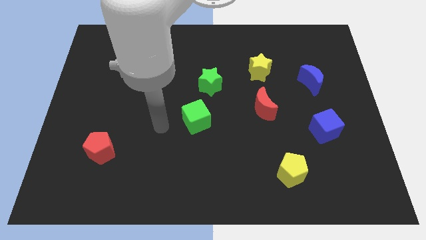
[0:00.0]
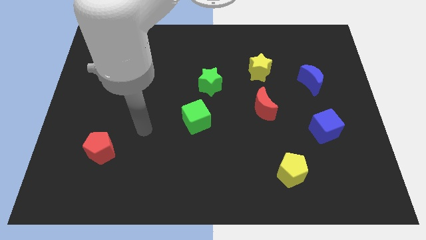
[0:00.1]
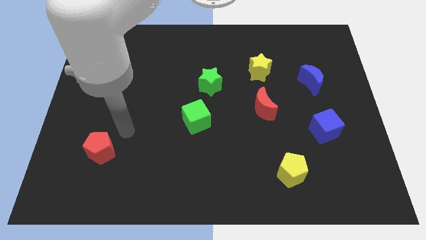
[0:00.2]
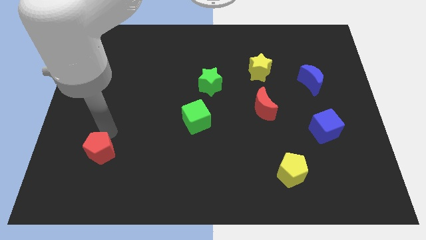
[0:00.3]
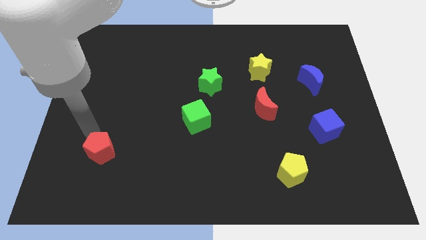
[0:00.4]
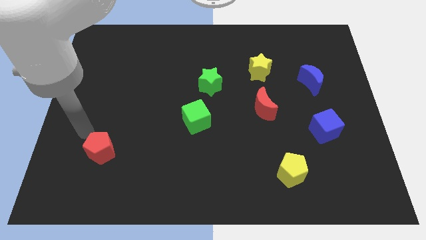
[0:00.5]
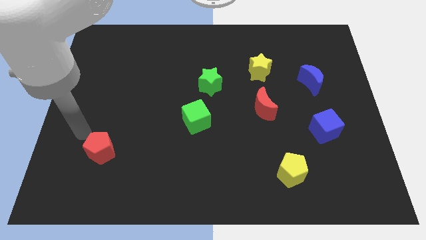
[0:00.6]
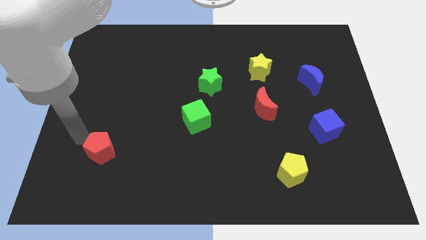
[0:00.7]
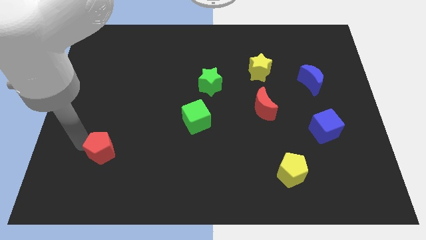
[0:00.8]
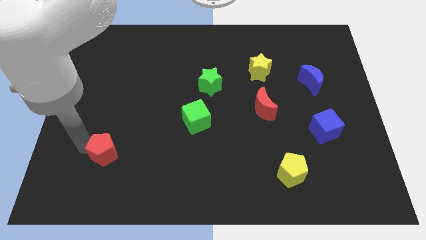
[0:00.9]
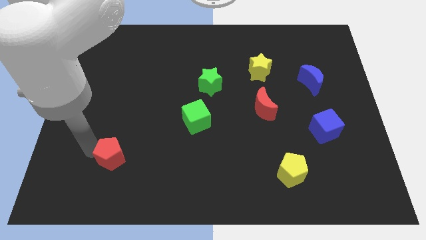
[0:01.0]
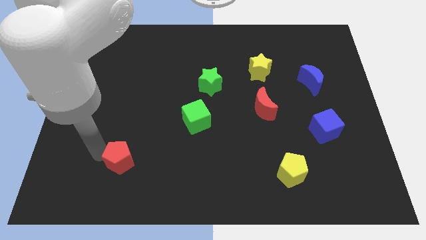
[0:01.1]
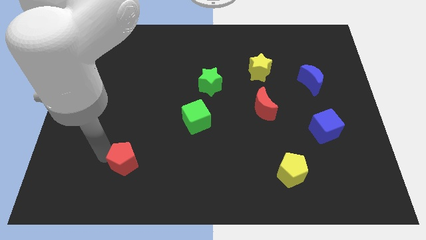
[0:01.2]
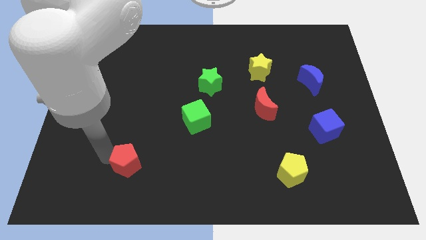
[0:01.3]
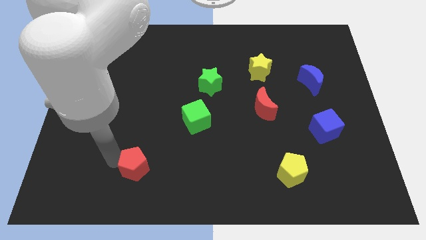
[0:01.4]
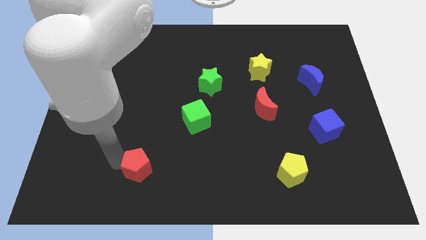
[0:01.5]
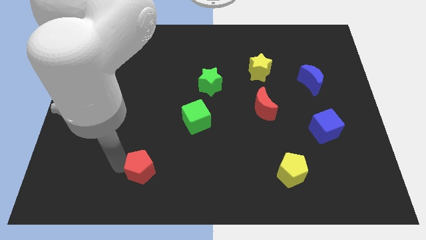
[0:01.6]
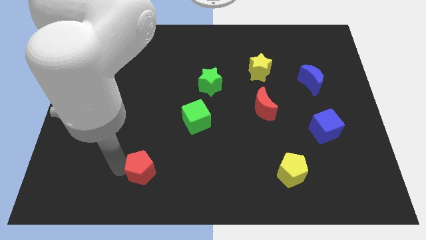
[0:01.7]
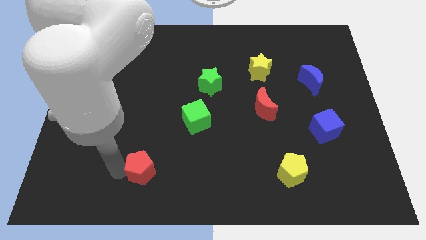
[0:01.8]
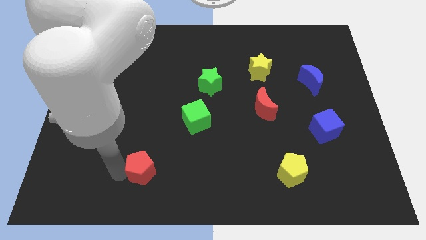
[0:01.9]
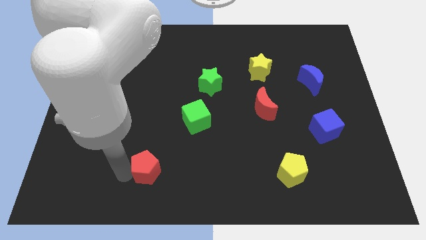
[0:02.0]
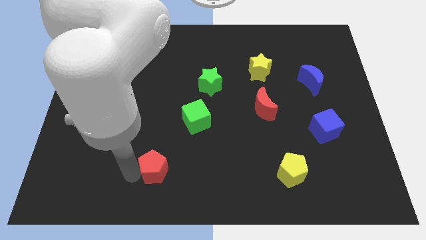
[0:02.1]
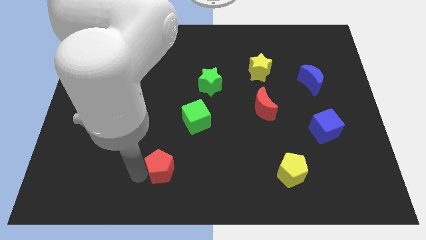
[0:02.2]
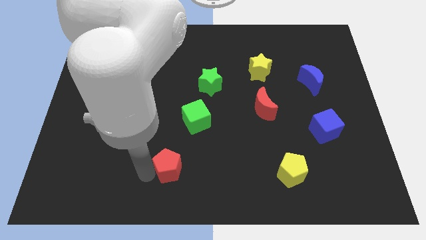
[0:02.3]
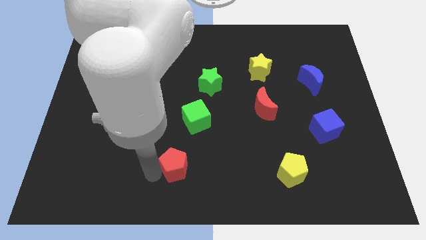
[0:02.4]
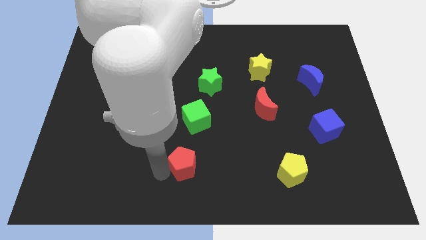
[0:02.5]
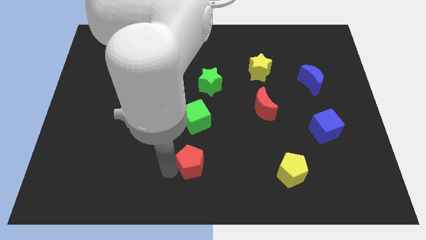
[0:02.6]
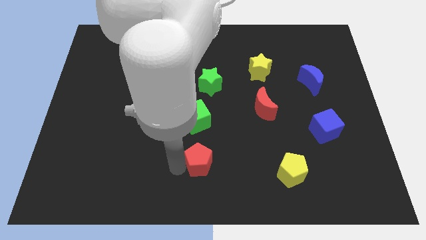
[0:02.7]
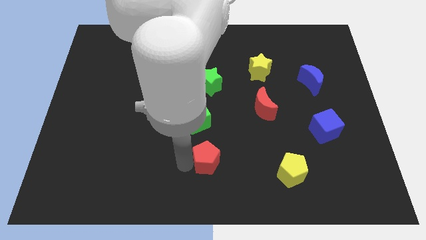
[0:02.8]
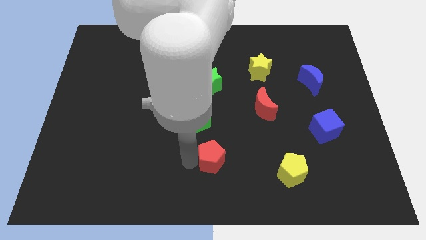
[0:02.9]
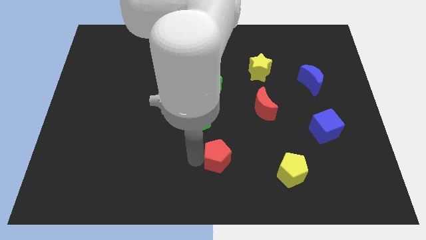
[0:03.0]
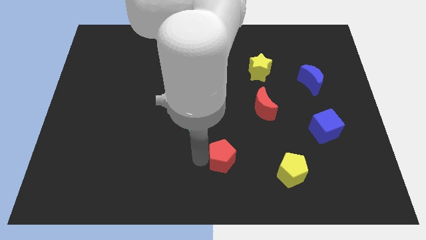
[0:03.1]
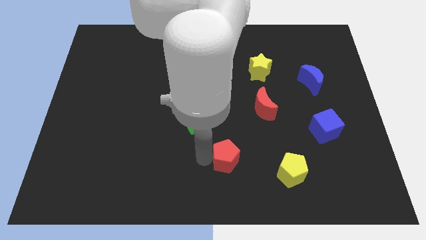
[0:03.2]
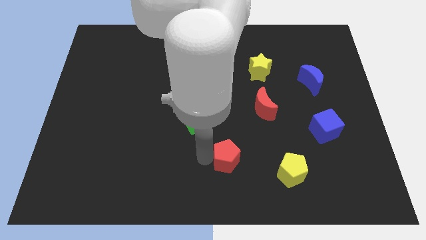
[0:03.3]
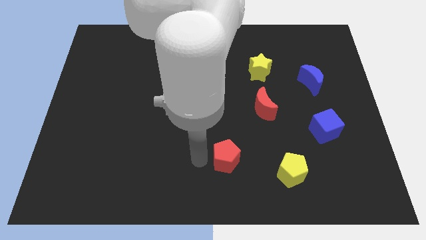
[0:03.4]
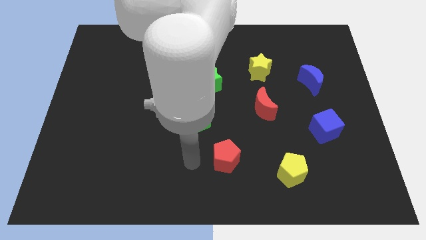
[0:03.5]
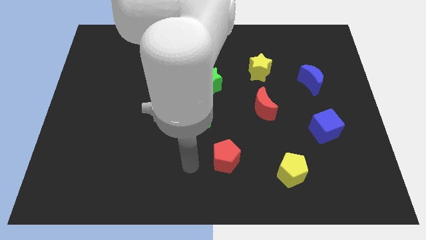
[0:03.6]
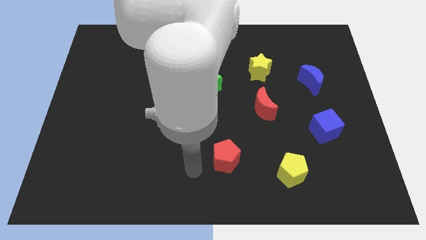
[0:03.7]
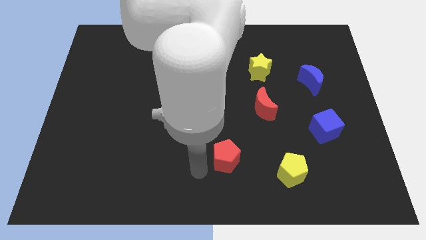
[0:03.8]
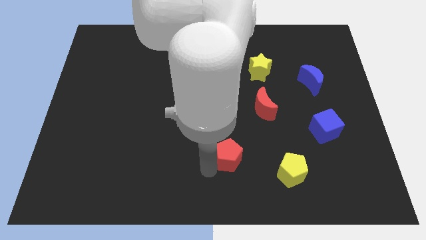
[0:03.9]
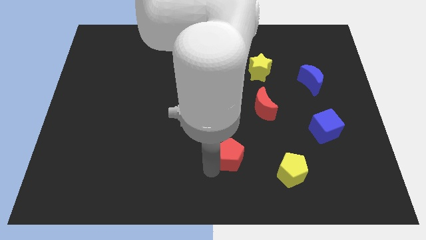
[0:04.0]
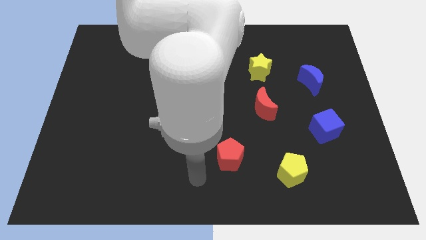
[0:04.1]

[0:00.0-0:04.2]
push the red pentagon towards the yellow pentagon

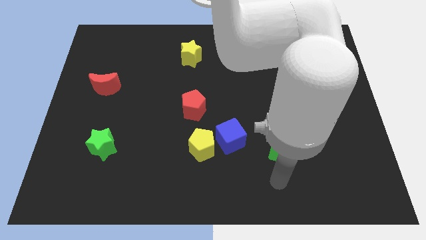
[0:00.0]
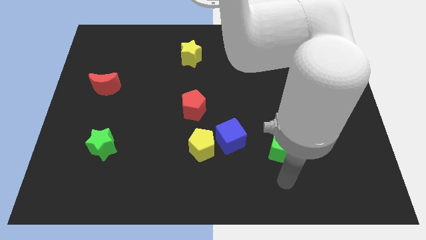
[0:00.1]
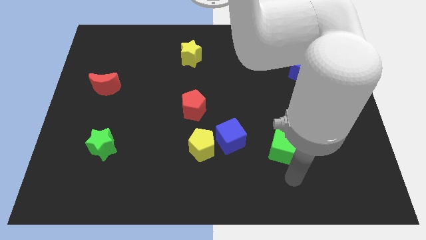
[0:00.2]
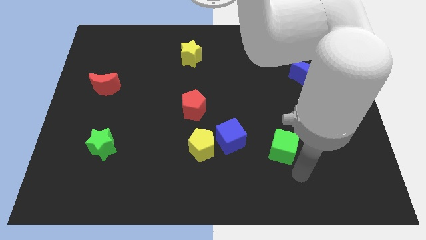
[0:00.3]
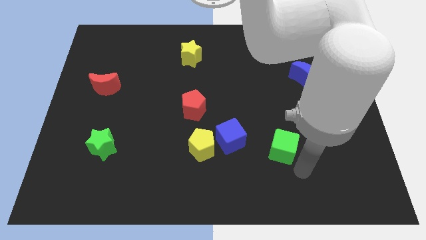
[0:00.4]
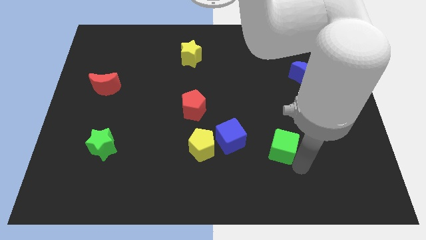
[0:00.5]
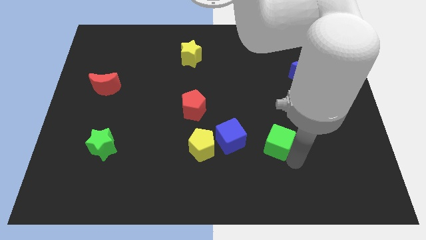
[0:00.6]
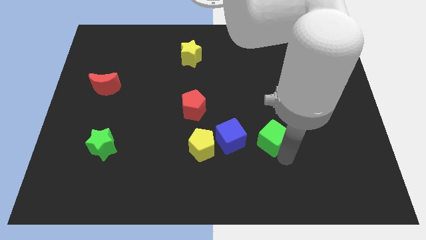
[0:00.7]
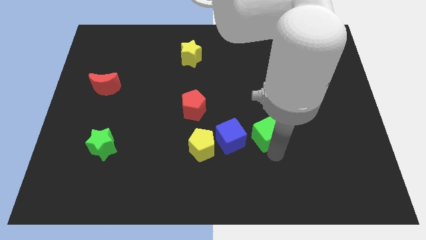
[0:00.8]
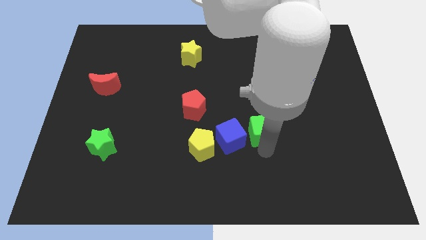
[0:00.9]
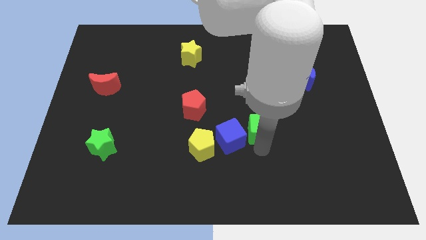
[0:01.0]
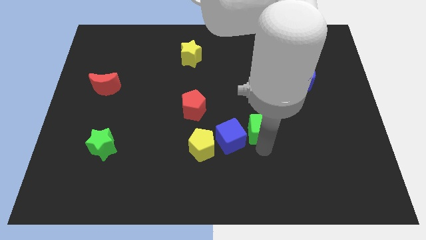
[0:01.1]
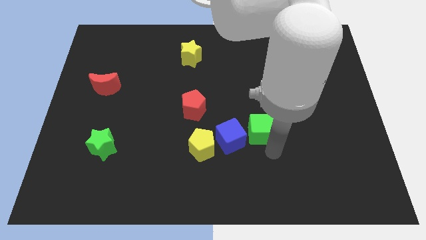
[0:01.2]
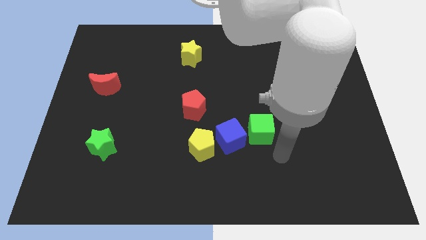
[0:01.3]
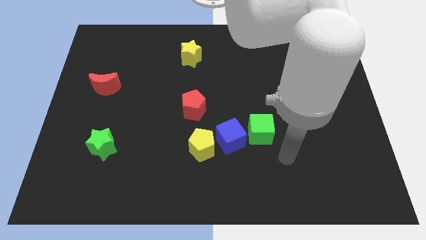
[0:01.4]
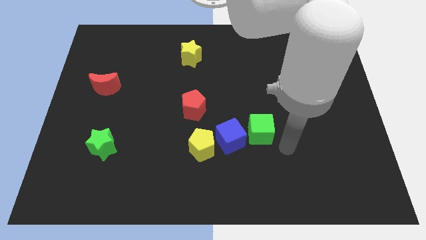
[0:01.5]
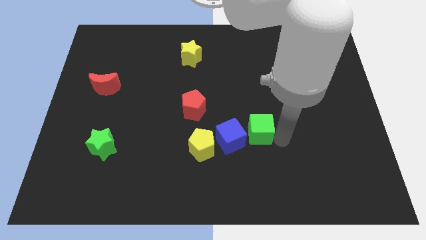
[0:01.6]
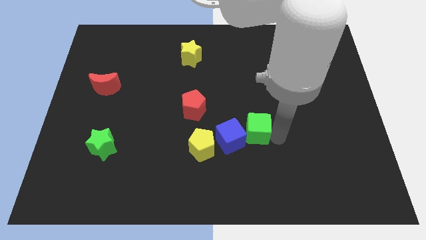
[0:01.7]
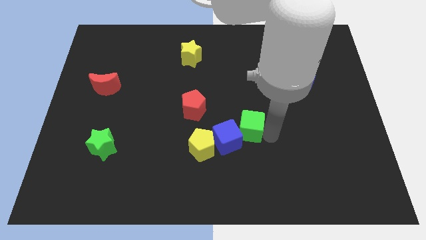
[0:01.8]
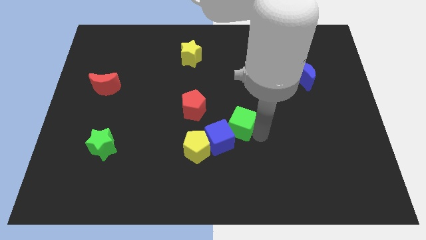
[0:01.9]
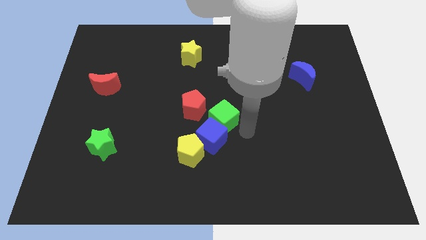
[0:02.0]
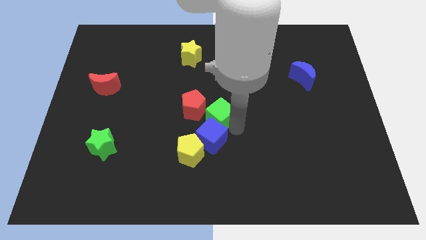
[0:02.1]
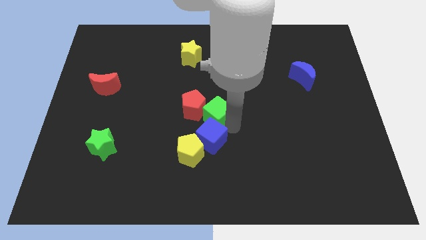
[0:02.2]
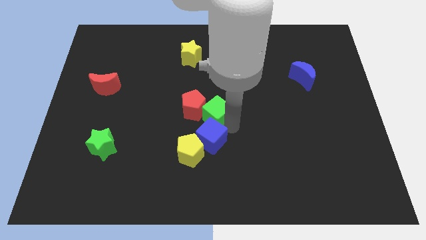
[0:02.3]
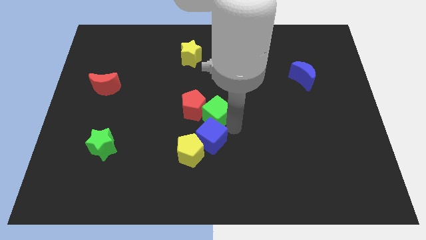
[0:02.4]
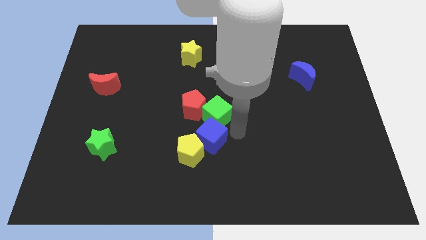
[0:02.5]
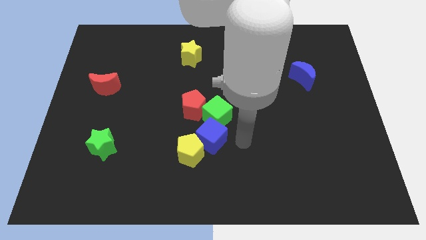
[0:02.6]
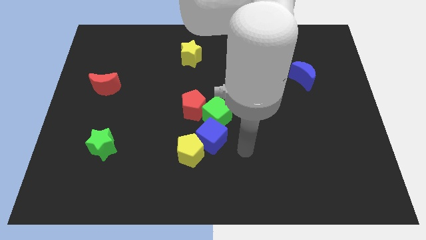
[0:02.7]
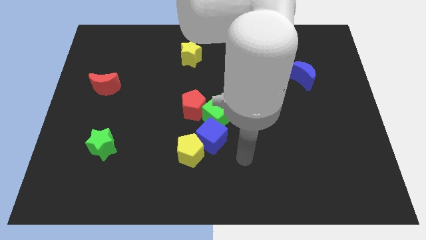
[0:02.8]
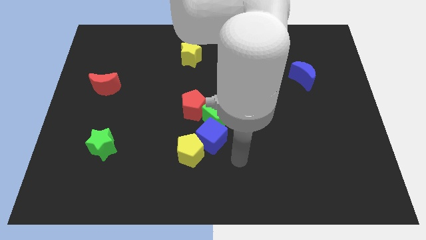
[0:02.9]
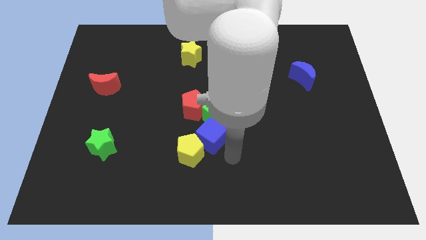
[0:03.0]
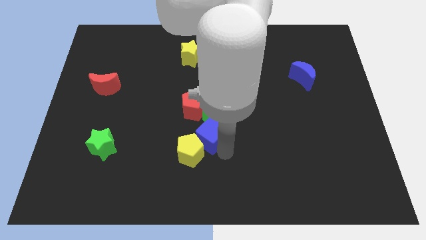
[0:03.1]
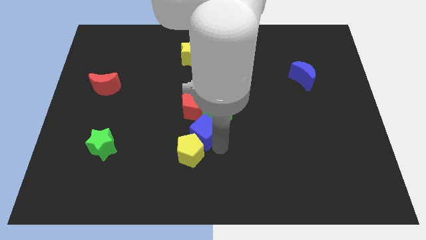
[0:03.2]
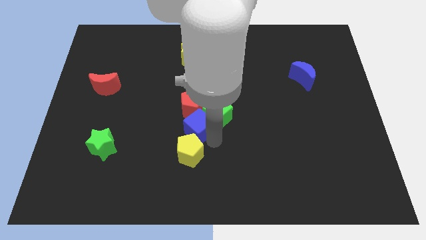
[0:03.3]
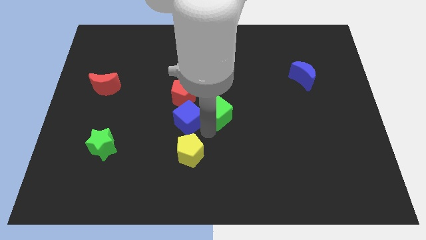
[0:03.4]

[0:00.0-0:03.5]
place the green cube towards the red pentagon

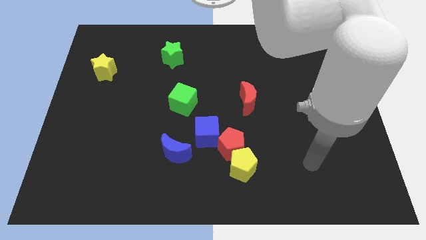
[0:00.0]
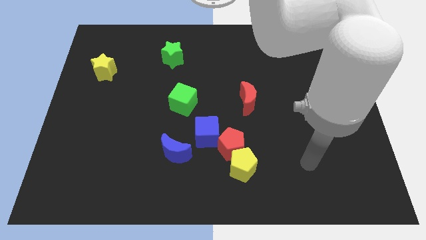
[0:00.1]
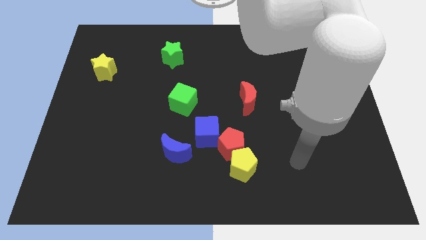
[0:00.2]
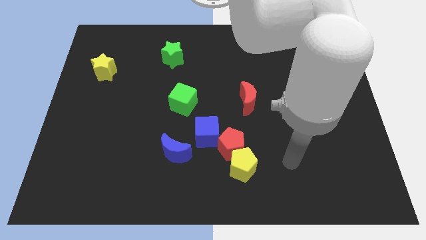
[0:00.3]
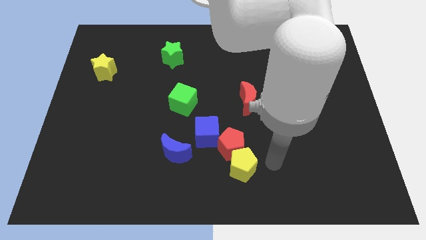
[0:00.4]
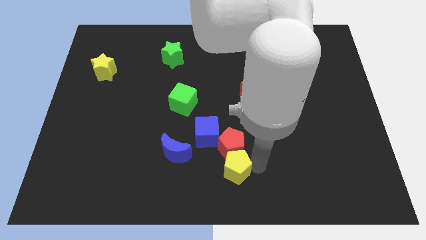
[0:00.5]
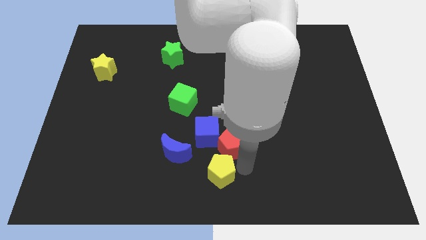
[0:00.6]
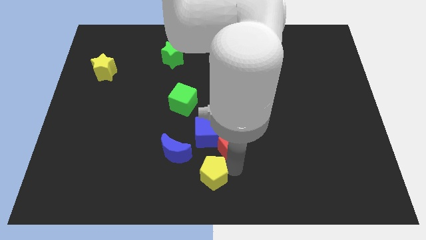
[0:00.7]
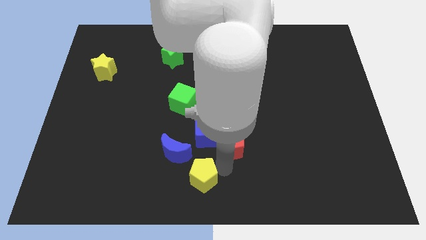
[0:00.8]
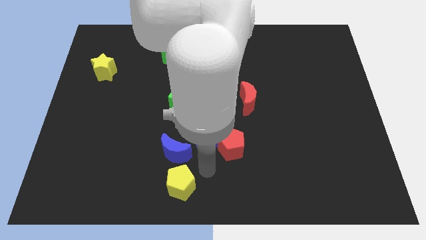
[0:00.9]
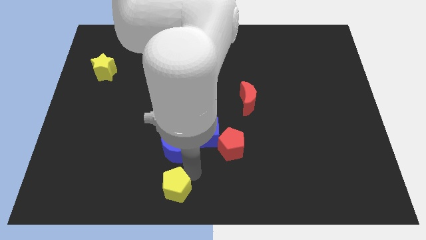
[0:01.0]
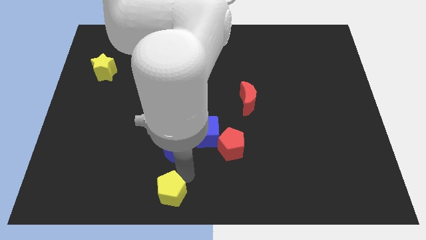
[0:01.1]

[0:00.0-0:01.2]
push the yellow pentagon below to the blue moon

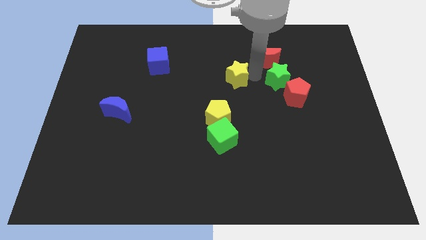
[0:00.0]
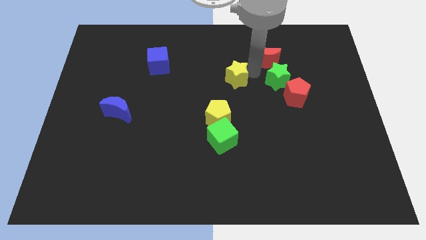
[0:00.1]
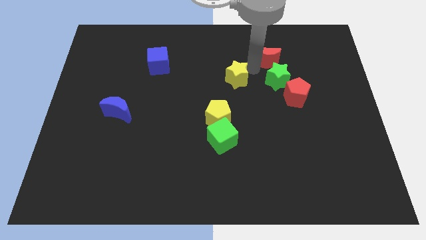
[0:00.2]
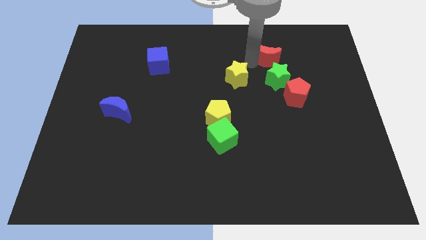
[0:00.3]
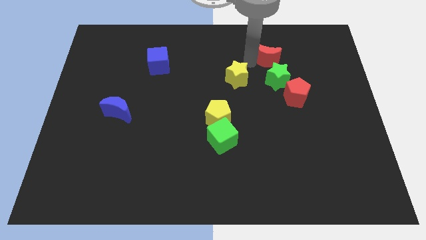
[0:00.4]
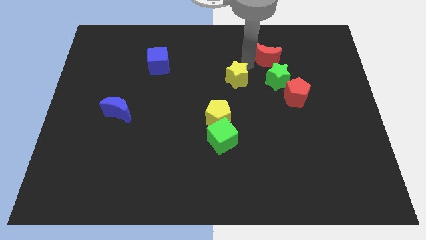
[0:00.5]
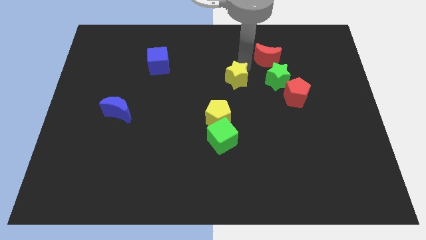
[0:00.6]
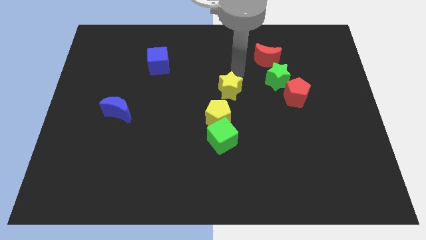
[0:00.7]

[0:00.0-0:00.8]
separate red moon and yellow star
